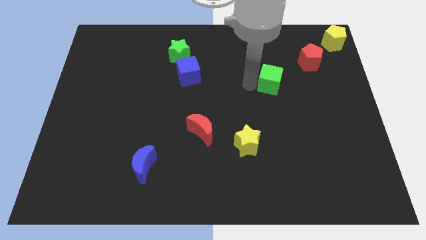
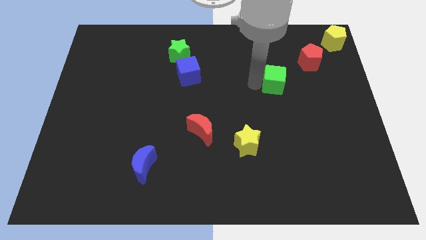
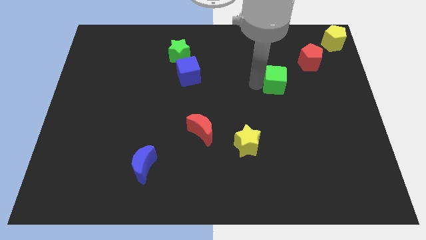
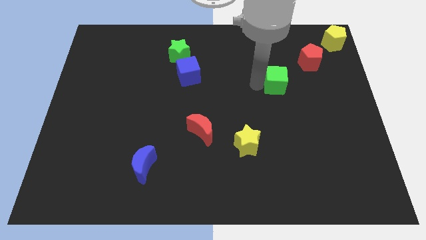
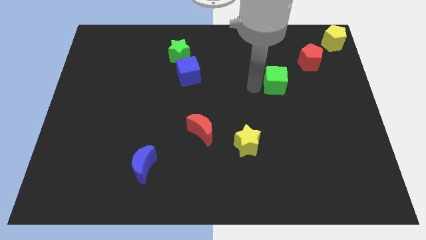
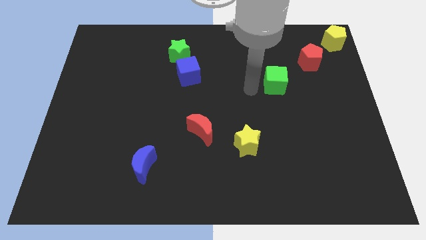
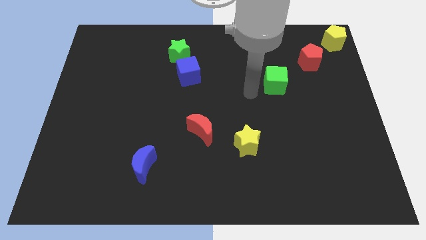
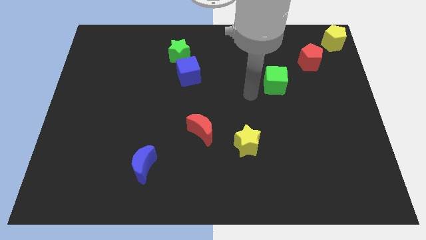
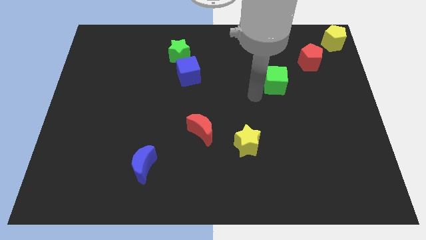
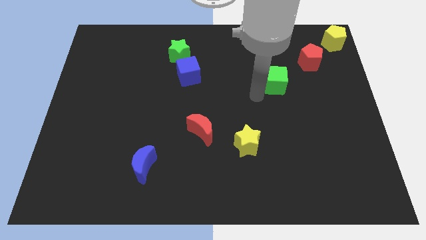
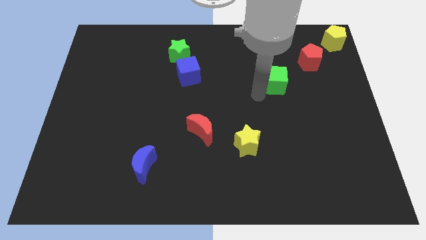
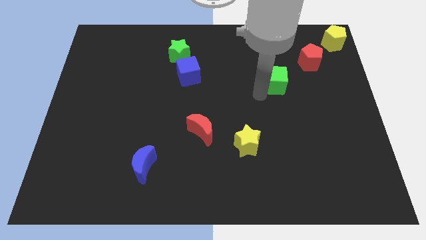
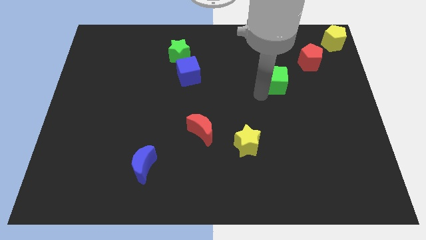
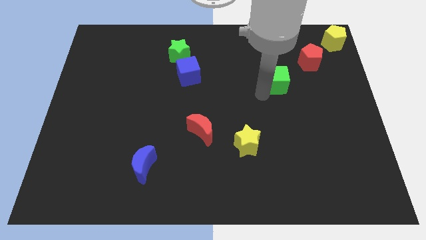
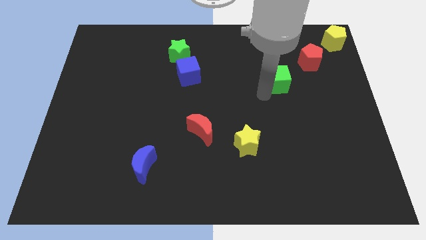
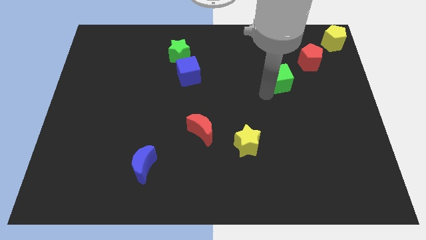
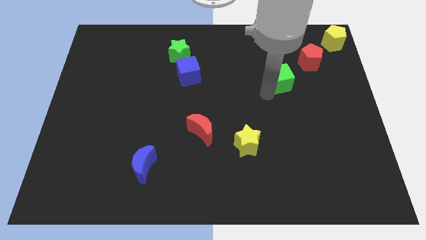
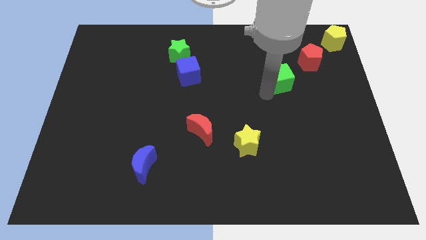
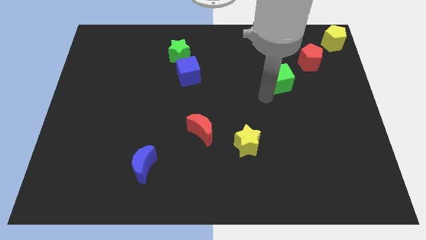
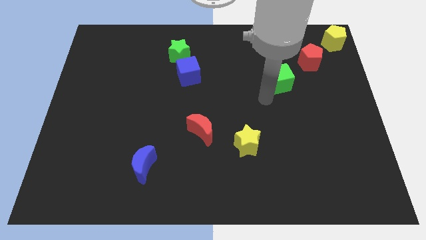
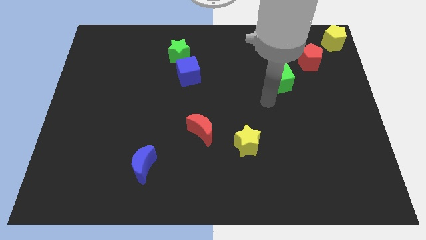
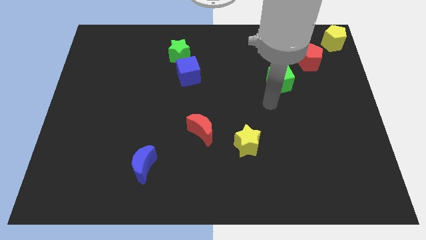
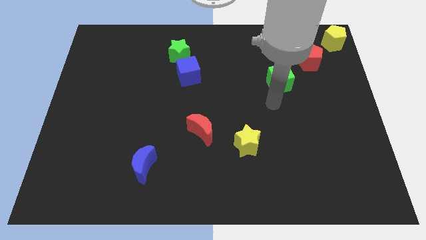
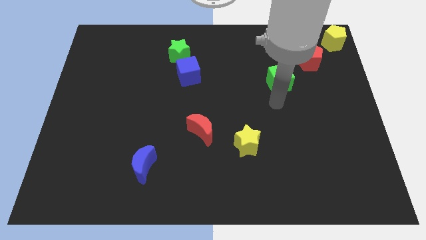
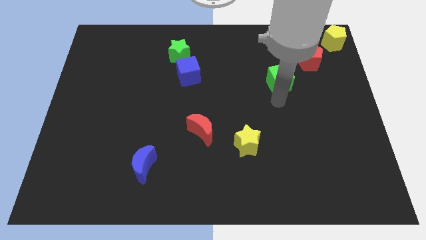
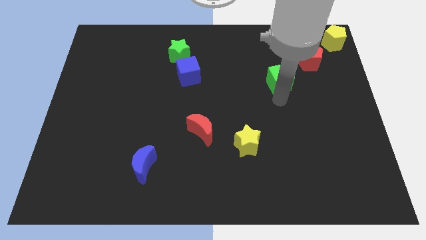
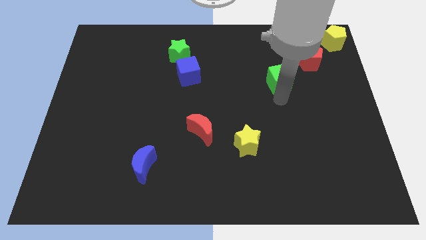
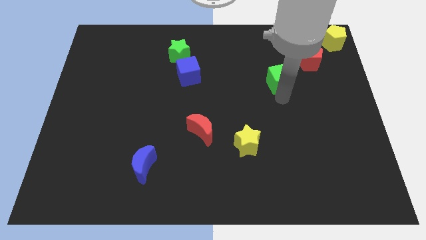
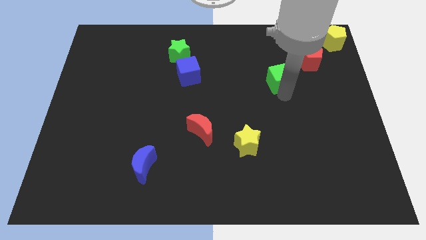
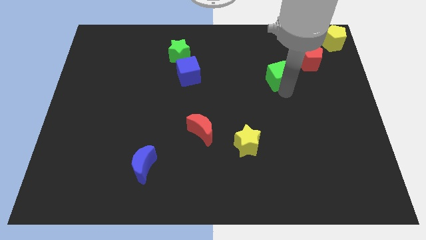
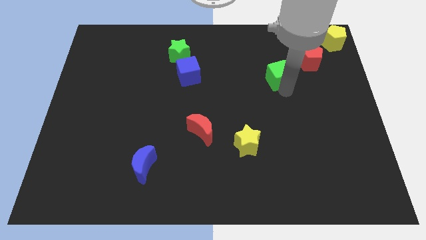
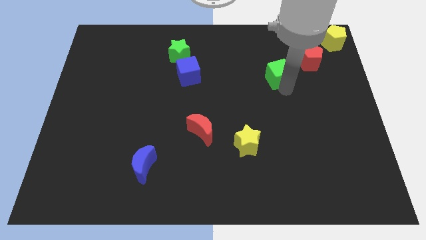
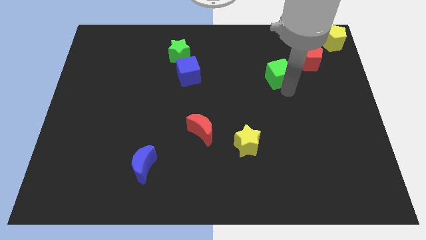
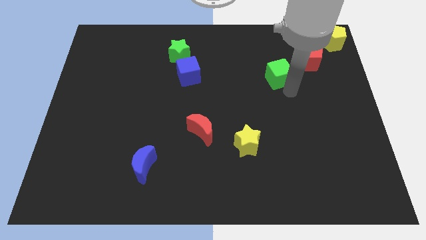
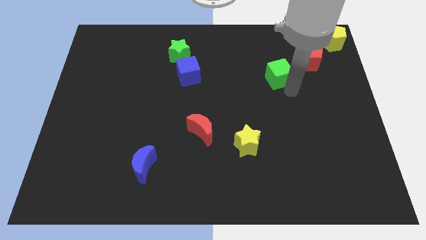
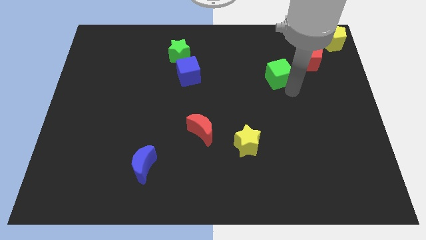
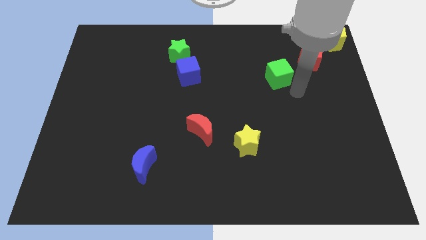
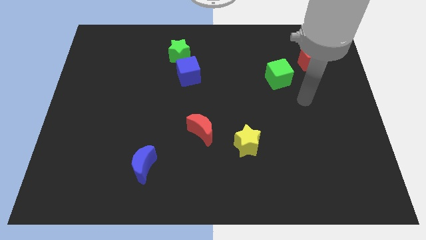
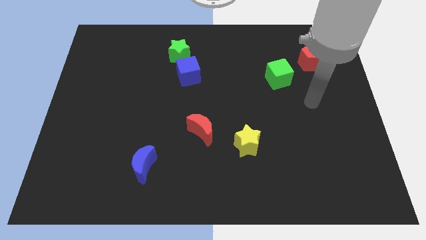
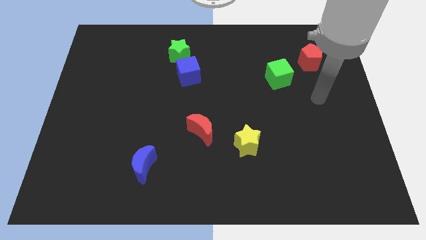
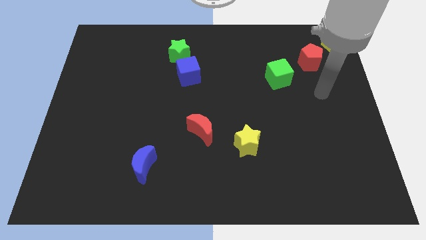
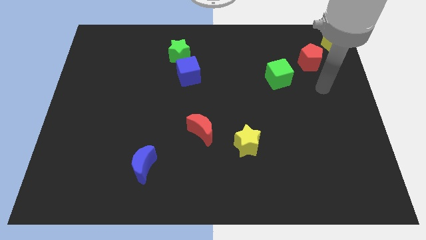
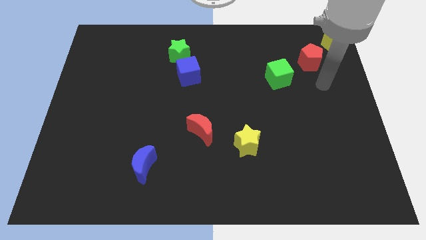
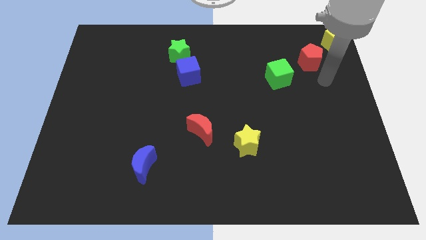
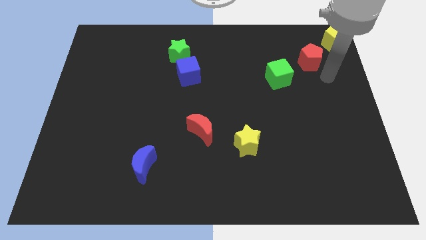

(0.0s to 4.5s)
slightly push the green cube towards the red pentagon

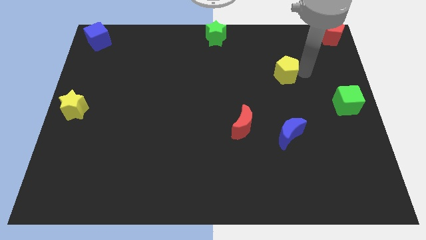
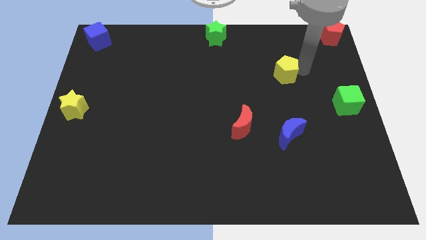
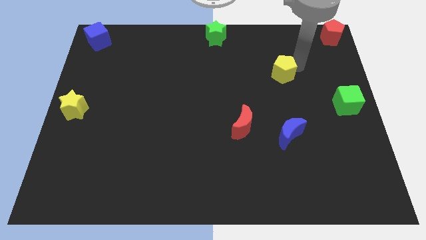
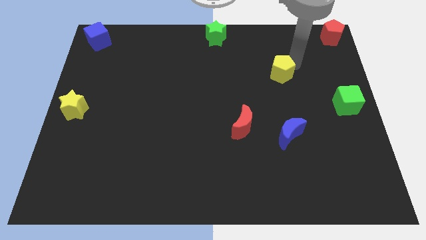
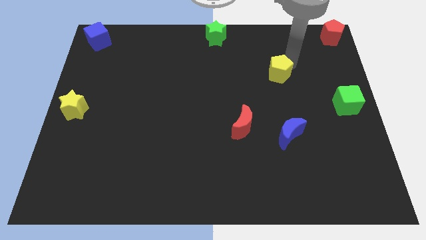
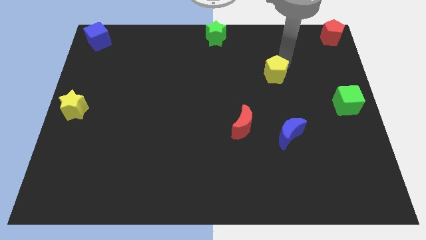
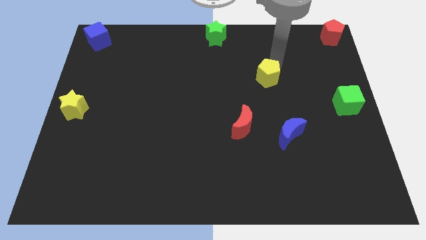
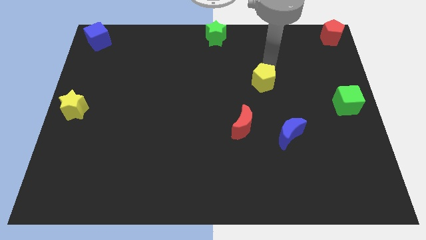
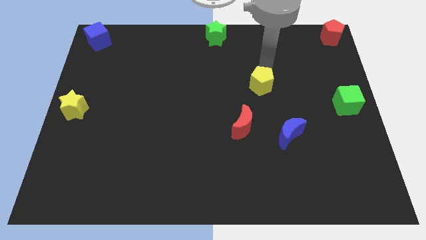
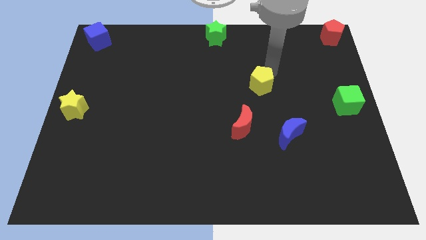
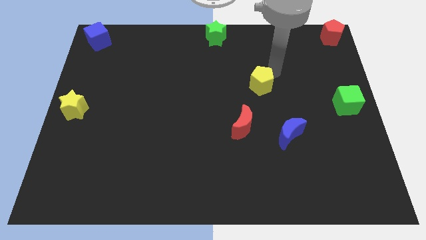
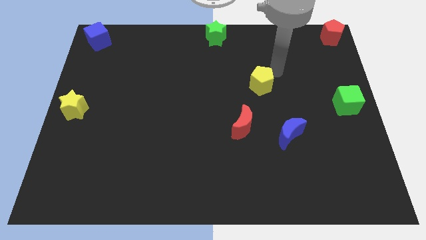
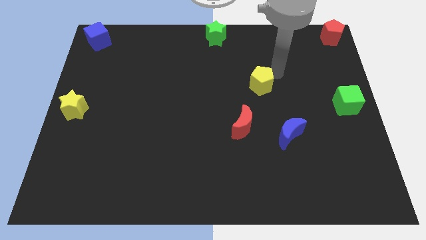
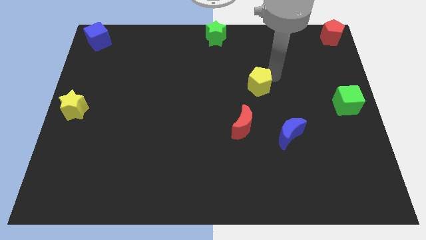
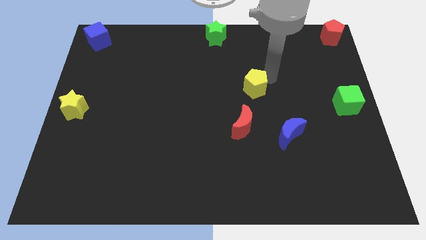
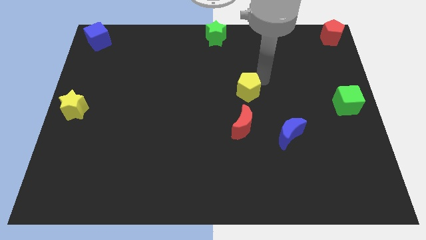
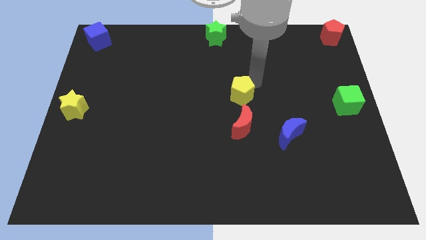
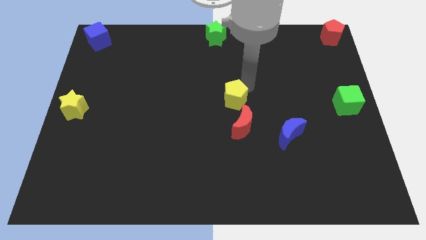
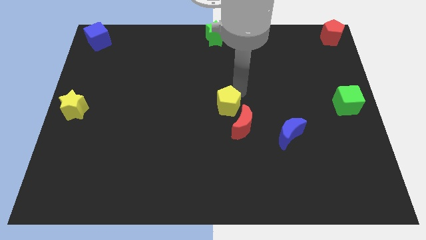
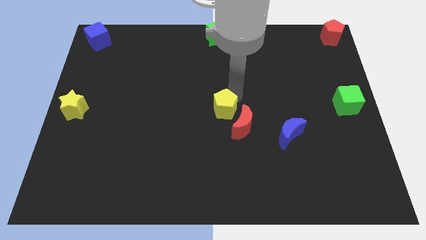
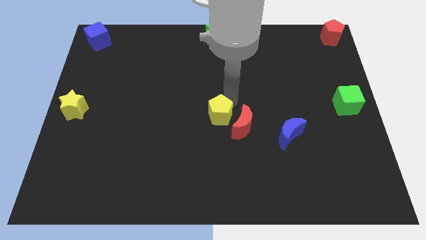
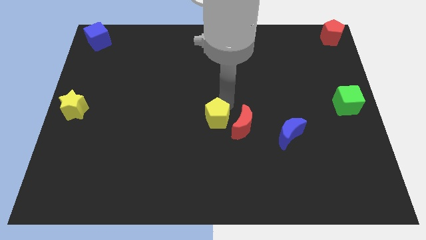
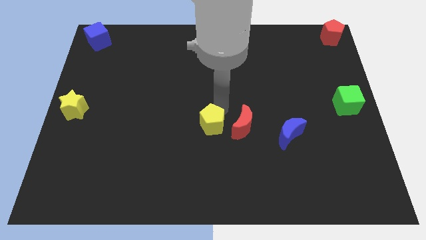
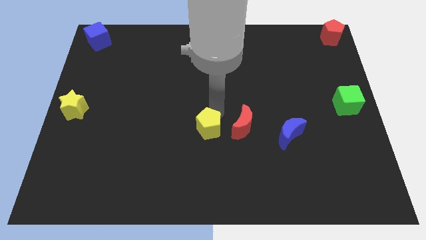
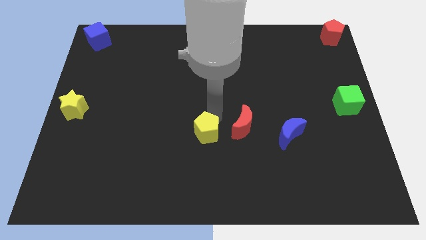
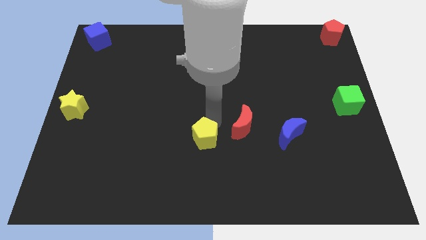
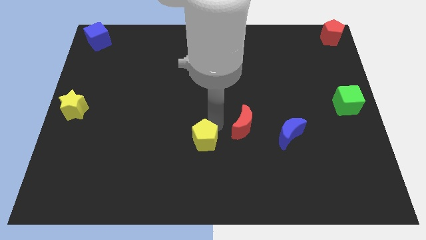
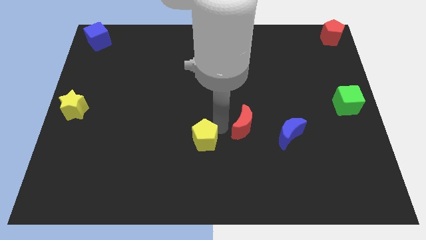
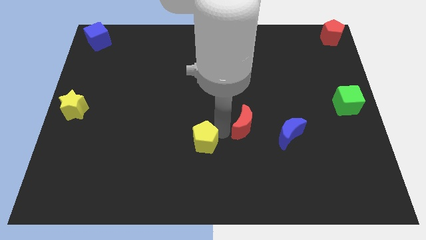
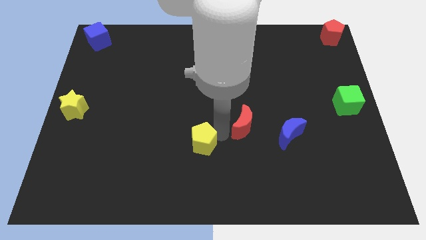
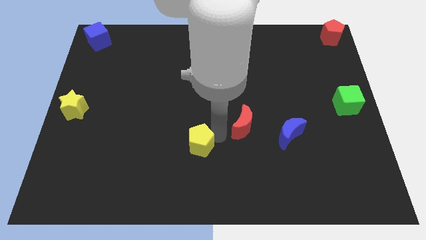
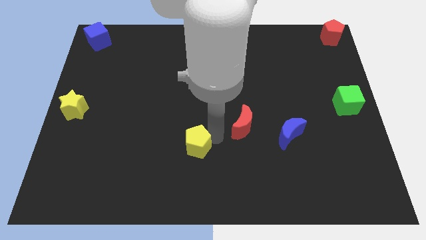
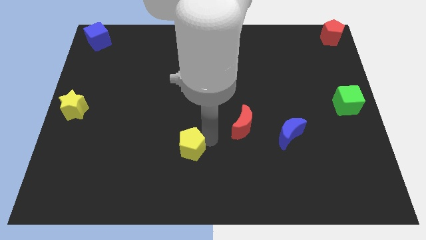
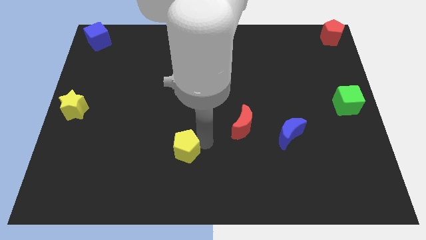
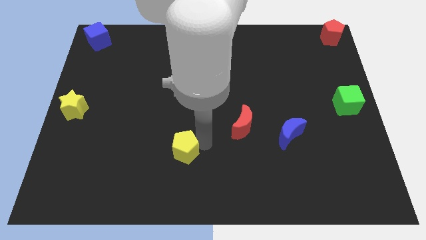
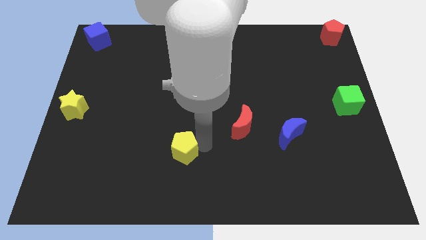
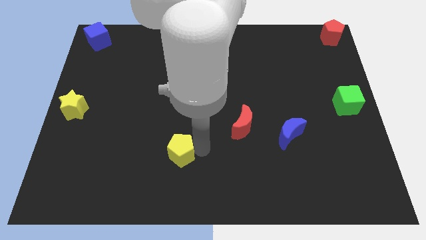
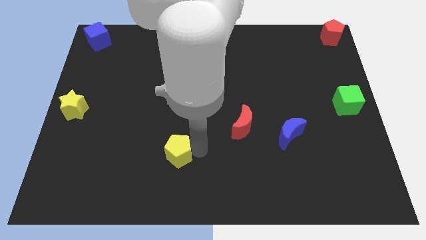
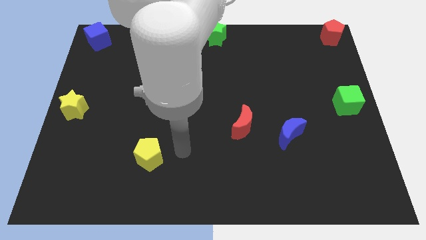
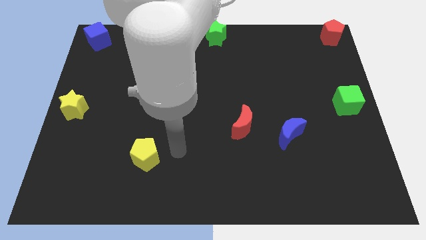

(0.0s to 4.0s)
move the yellow pentagon diagonally left to the red crescent

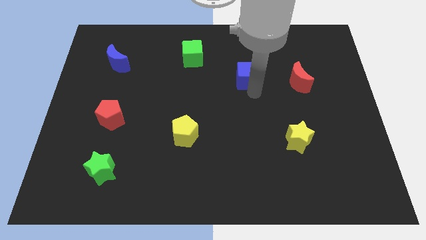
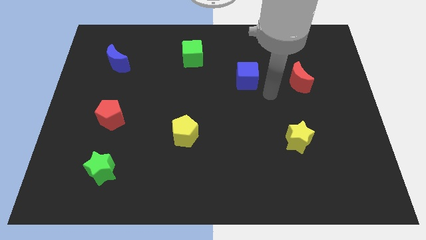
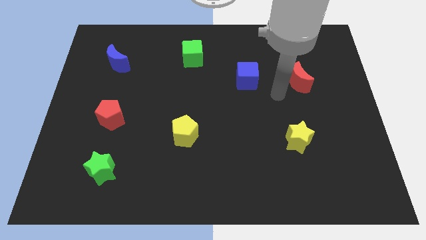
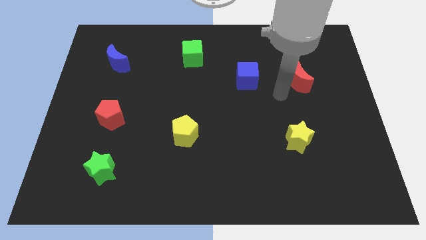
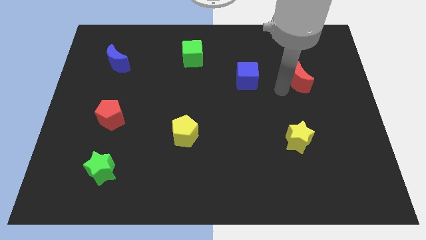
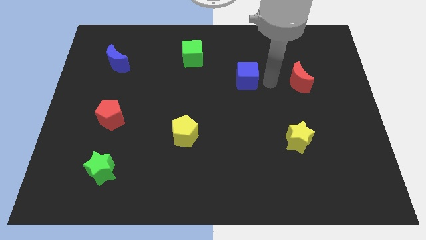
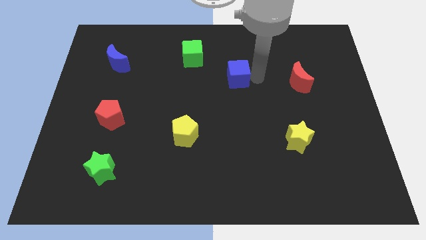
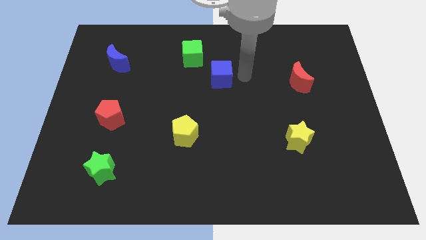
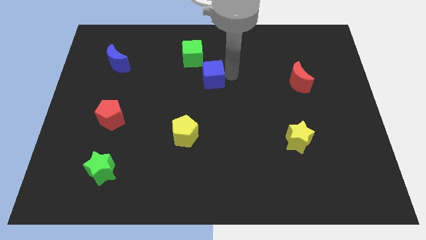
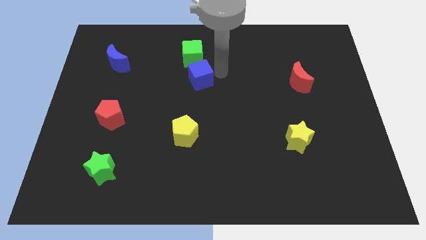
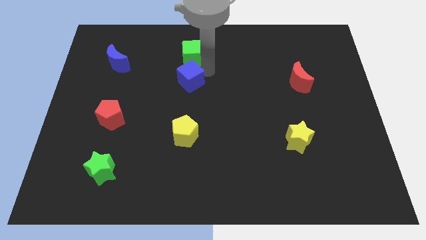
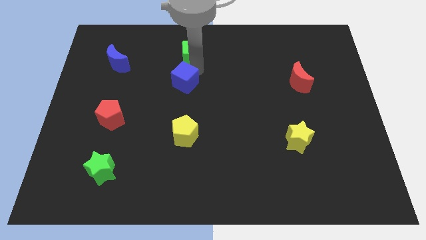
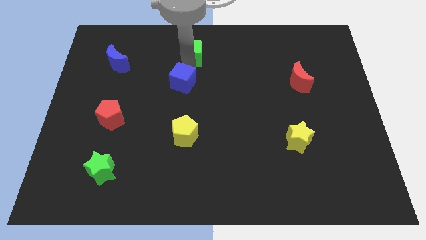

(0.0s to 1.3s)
push the blue cube vertically below the green cube
